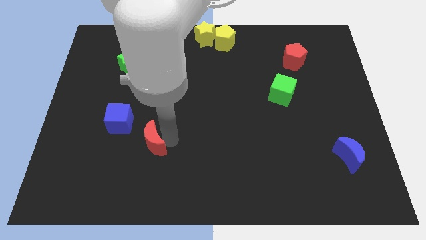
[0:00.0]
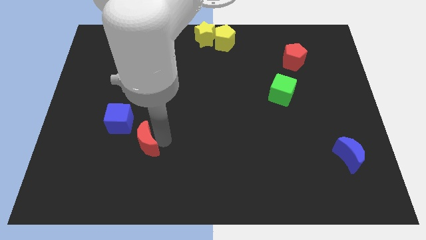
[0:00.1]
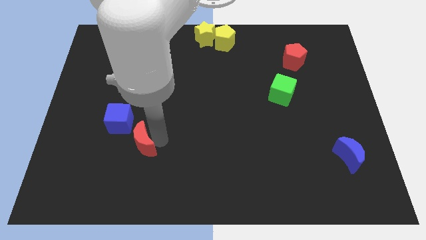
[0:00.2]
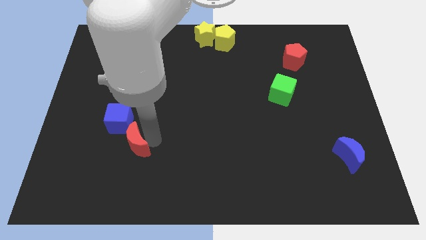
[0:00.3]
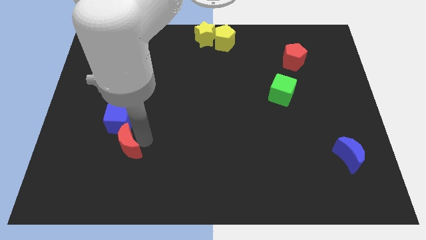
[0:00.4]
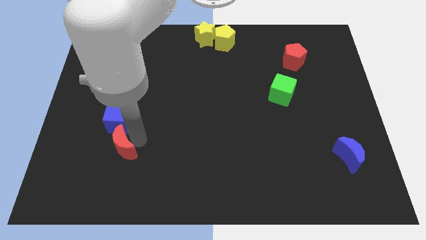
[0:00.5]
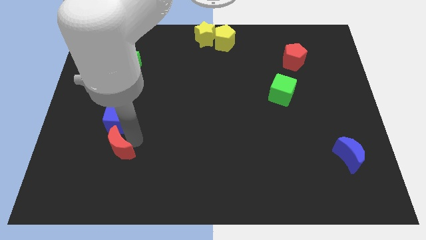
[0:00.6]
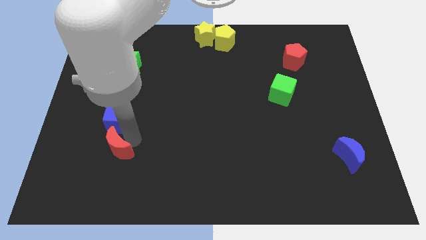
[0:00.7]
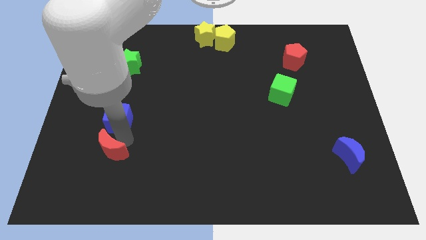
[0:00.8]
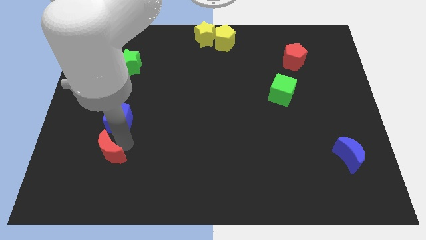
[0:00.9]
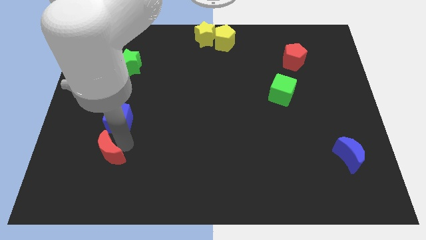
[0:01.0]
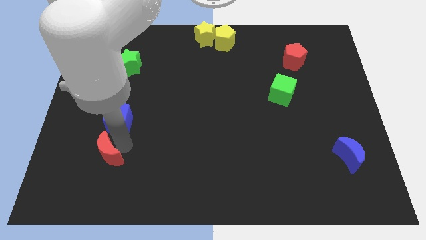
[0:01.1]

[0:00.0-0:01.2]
push red crescent below blue cube

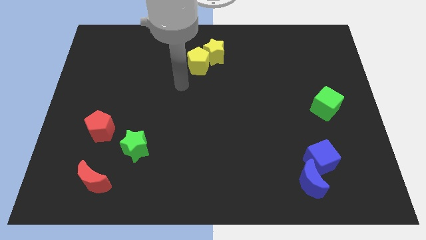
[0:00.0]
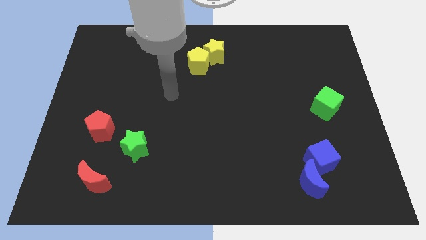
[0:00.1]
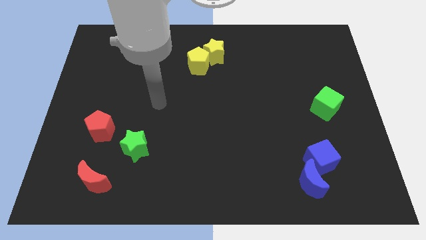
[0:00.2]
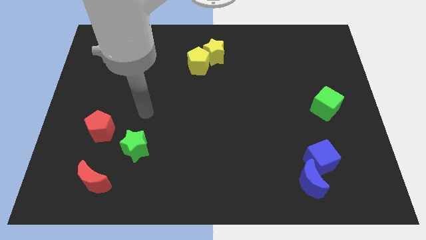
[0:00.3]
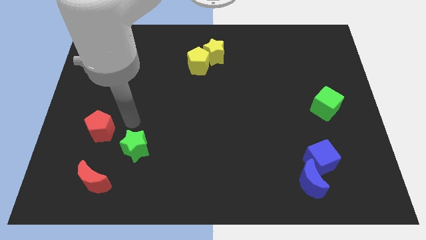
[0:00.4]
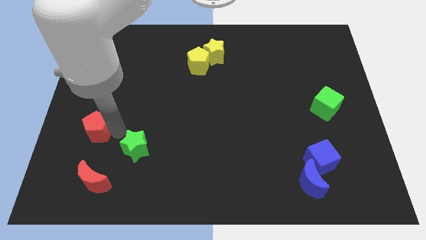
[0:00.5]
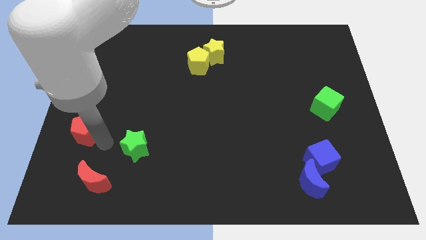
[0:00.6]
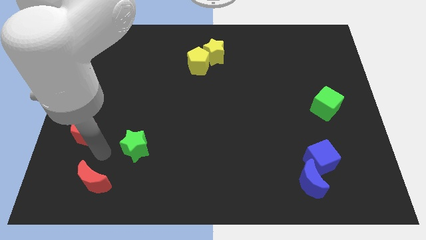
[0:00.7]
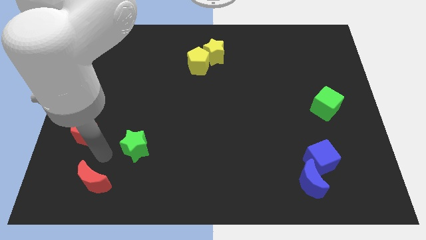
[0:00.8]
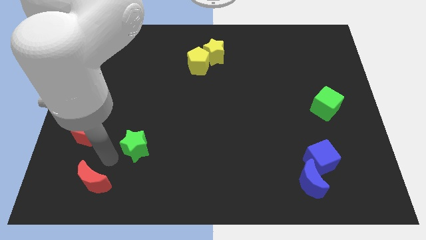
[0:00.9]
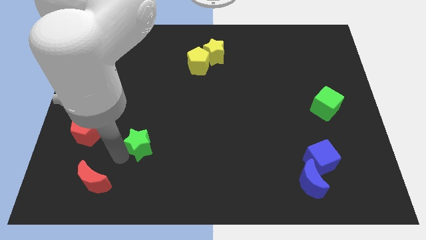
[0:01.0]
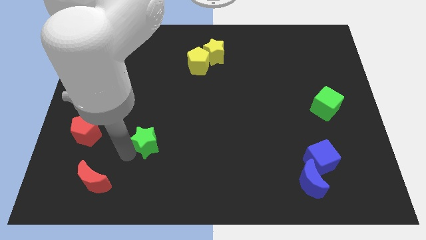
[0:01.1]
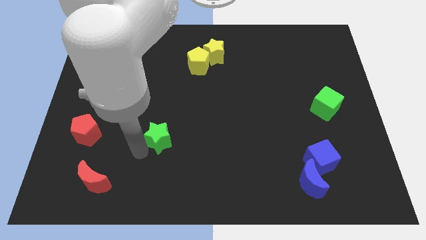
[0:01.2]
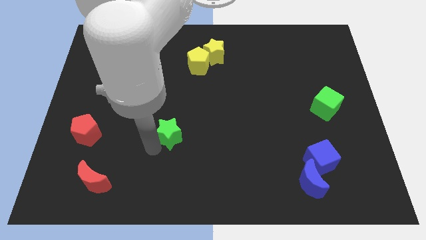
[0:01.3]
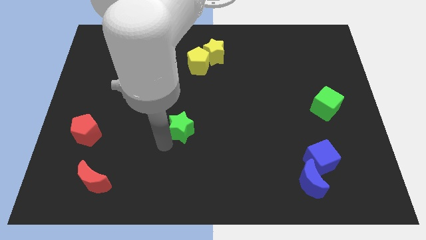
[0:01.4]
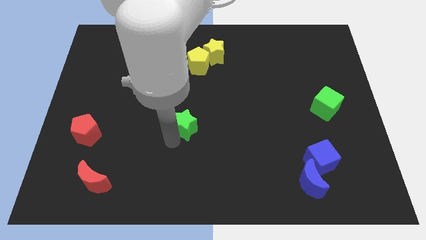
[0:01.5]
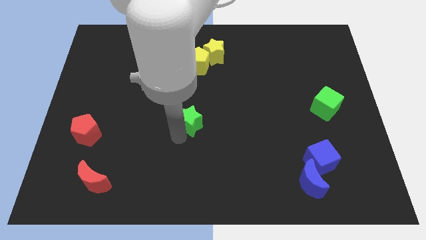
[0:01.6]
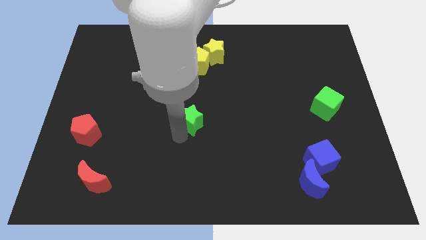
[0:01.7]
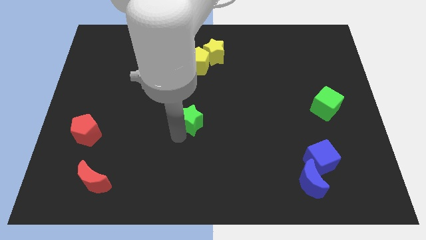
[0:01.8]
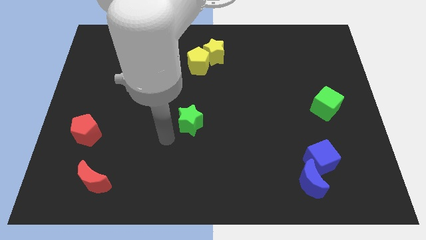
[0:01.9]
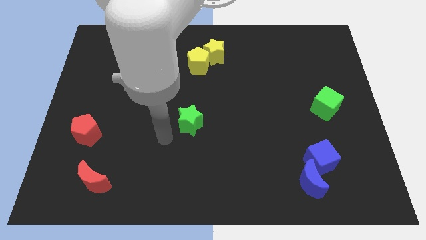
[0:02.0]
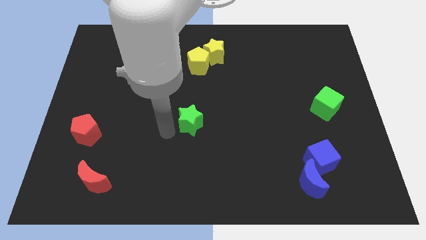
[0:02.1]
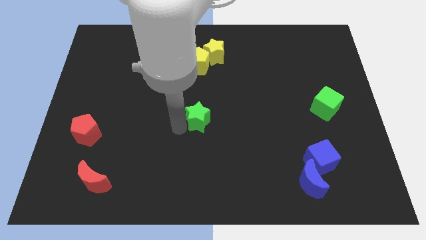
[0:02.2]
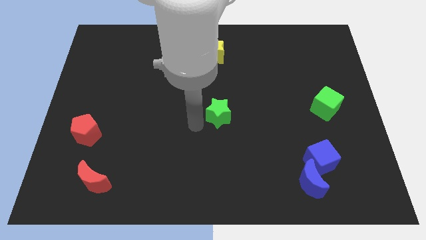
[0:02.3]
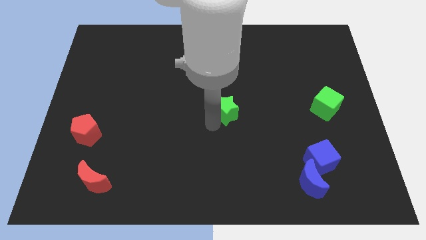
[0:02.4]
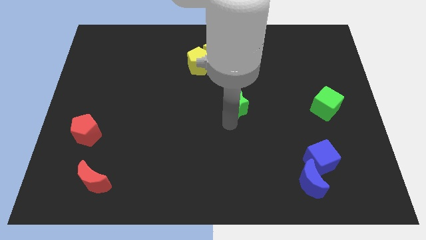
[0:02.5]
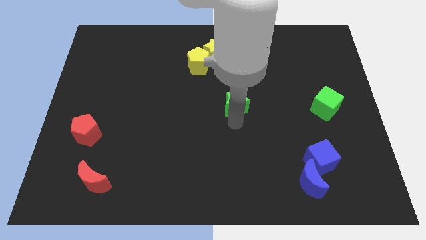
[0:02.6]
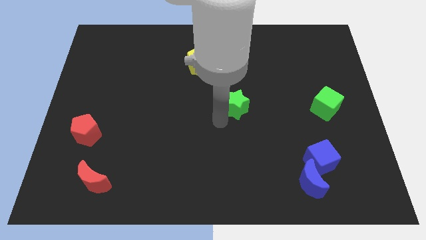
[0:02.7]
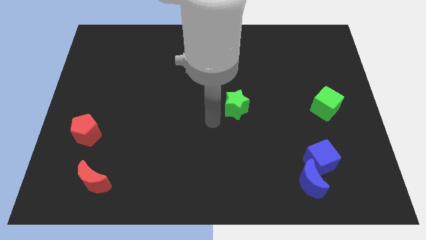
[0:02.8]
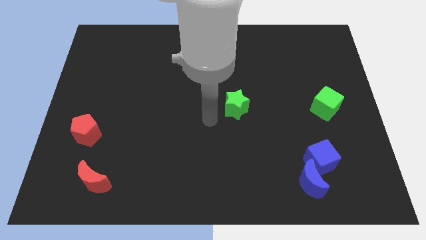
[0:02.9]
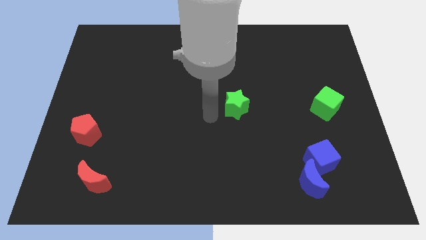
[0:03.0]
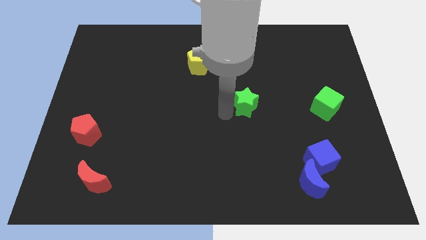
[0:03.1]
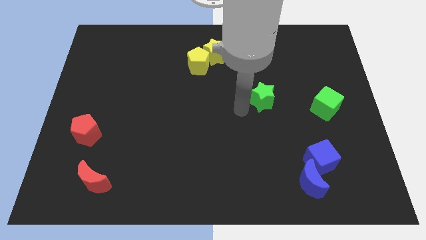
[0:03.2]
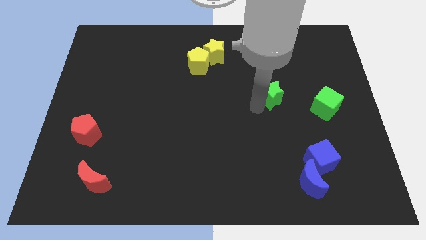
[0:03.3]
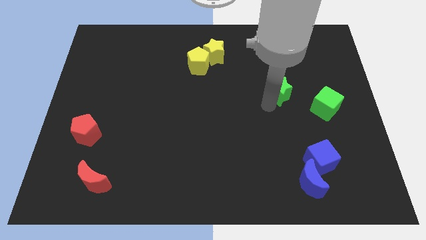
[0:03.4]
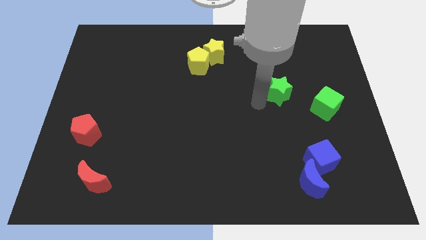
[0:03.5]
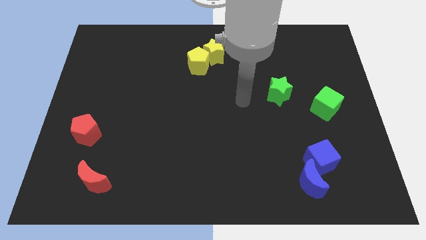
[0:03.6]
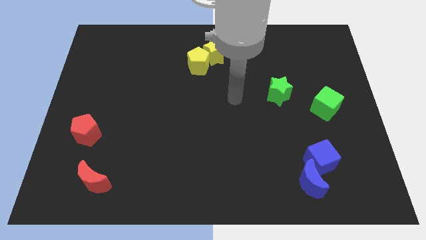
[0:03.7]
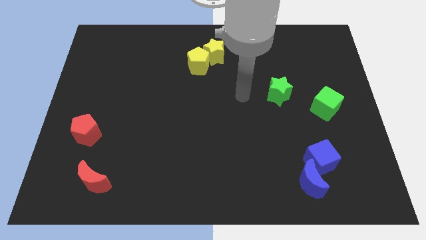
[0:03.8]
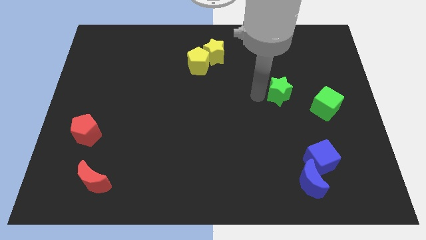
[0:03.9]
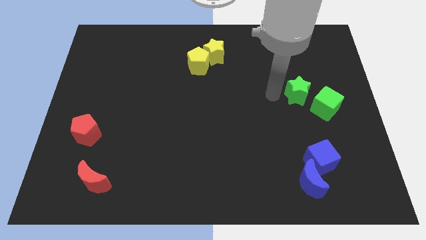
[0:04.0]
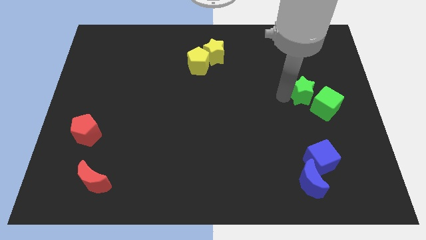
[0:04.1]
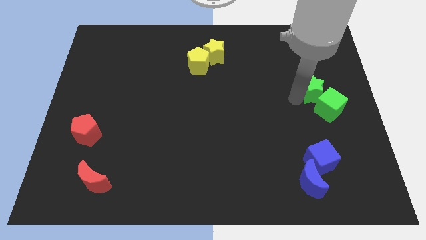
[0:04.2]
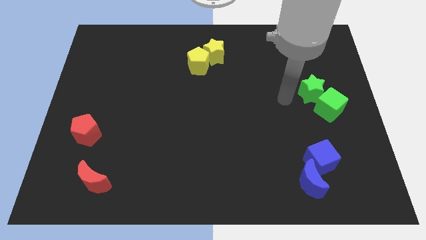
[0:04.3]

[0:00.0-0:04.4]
make a pair of green blocks above the blue blocks

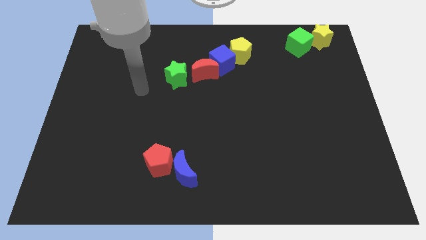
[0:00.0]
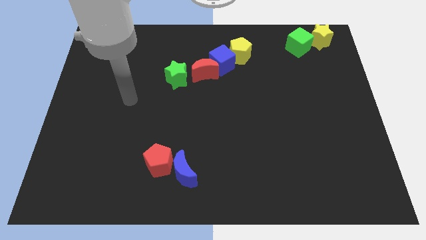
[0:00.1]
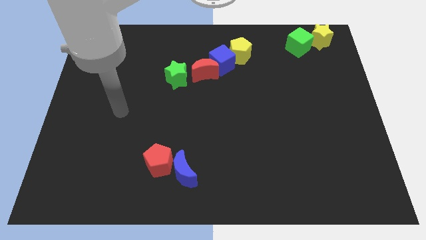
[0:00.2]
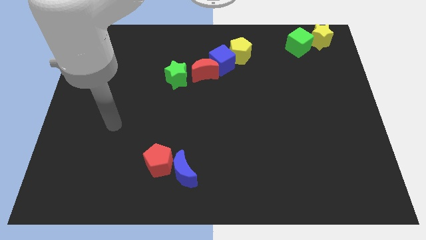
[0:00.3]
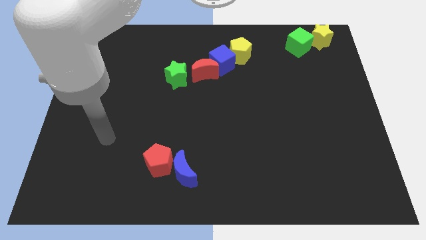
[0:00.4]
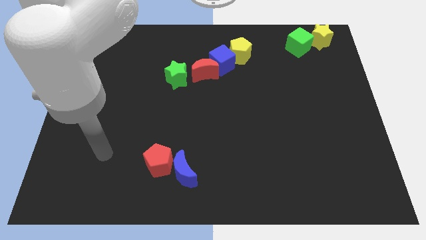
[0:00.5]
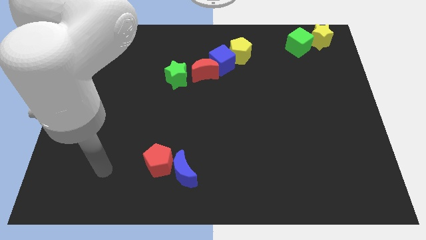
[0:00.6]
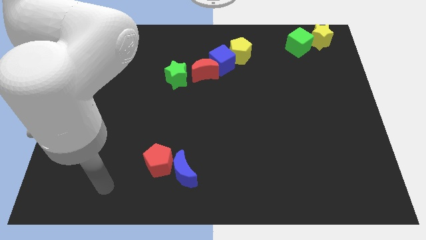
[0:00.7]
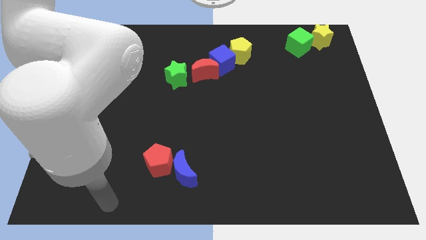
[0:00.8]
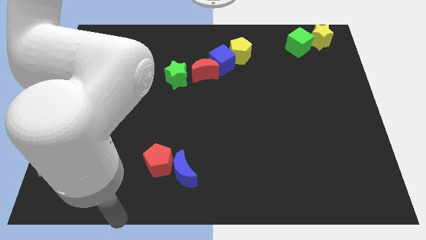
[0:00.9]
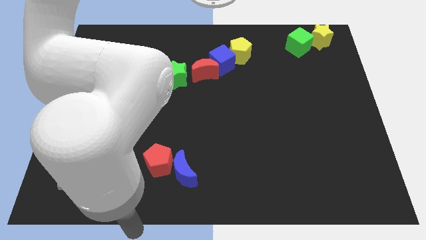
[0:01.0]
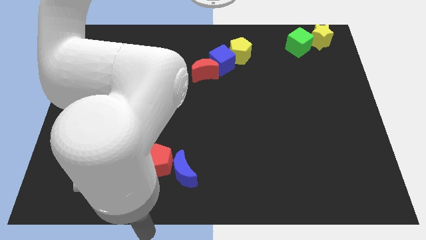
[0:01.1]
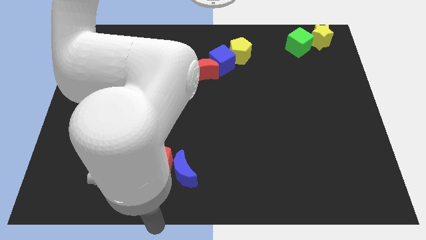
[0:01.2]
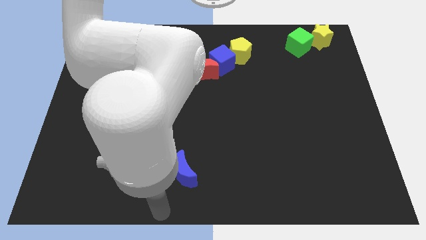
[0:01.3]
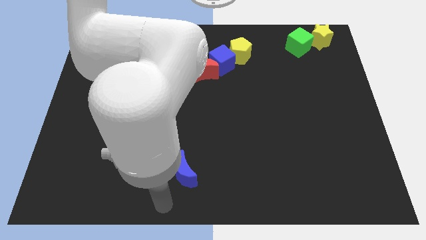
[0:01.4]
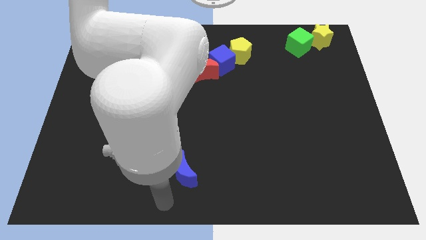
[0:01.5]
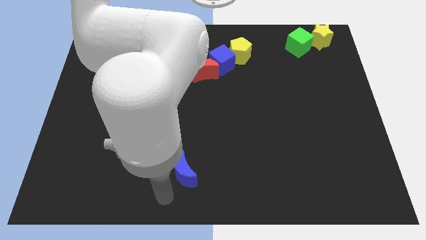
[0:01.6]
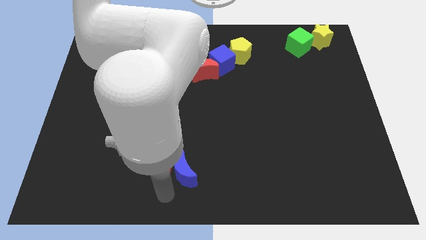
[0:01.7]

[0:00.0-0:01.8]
point your arm between red pentagon and blue moon

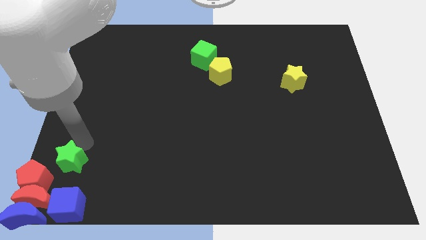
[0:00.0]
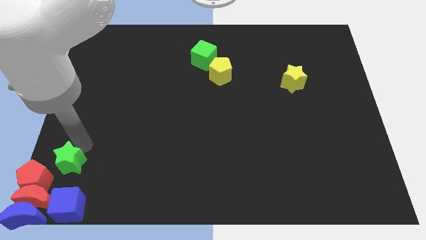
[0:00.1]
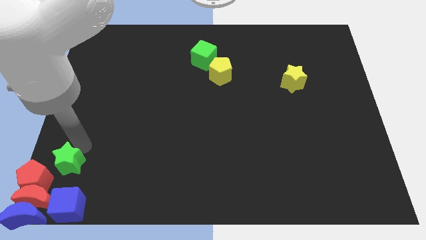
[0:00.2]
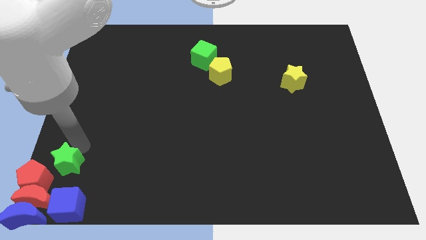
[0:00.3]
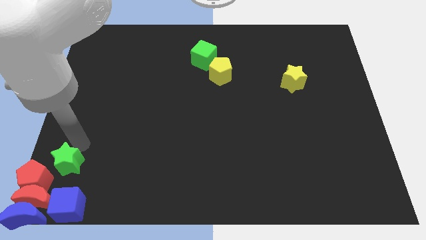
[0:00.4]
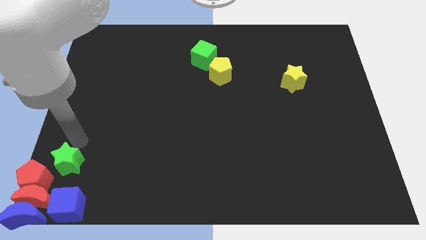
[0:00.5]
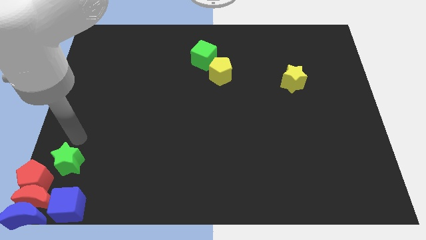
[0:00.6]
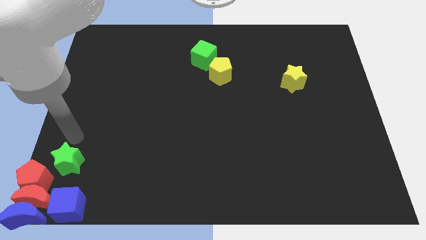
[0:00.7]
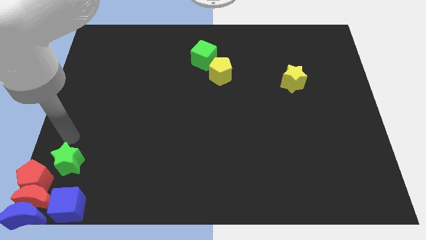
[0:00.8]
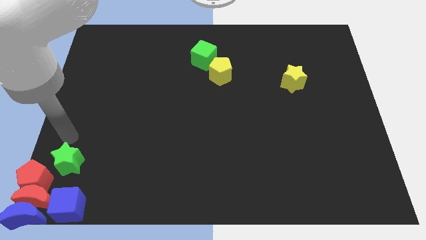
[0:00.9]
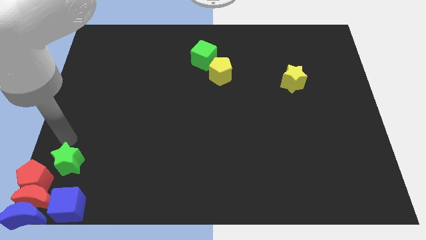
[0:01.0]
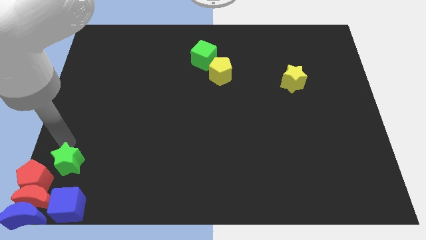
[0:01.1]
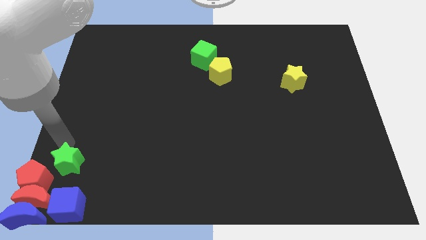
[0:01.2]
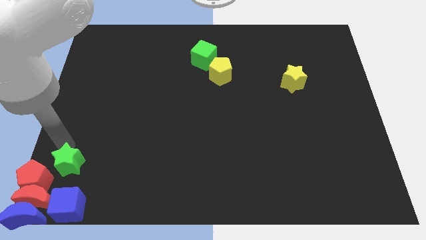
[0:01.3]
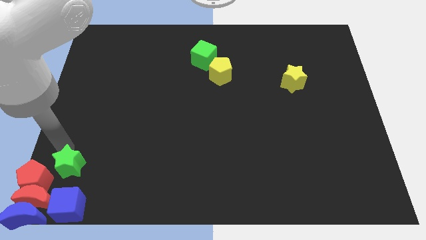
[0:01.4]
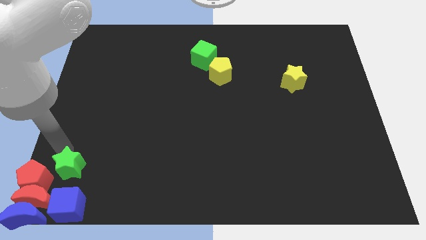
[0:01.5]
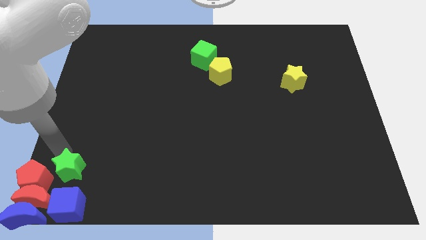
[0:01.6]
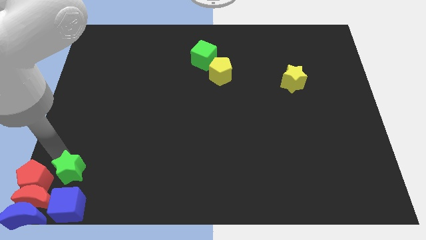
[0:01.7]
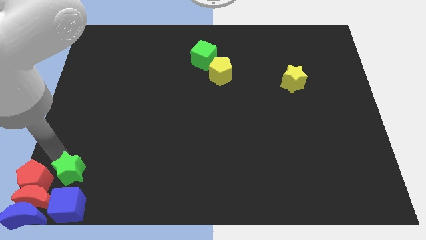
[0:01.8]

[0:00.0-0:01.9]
move the green star to the top of the blue cube to the bottom center of the board
